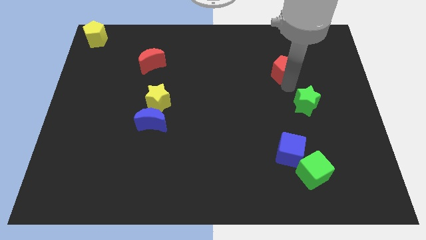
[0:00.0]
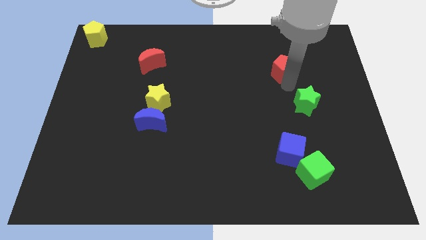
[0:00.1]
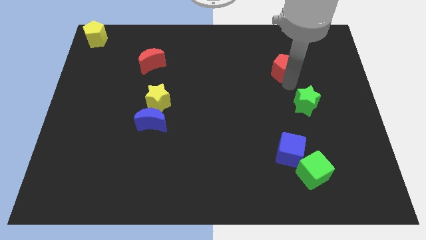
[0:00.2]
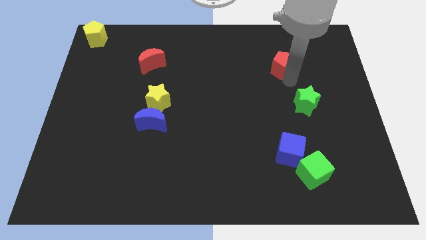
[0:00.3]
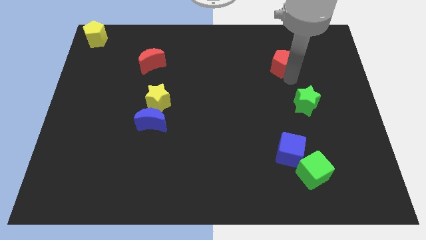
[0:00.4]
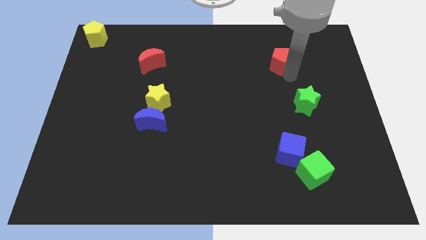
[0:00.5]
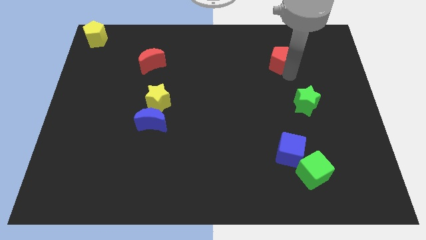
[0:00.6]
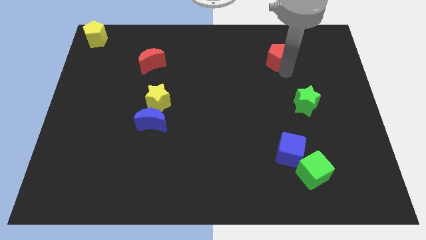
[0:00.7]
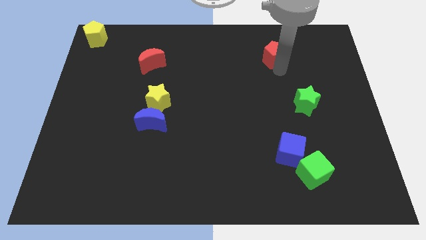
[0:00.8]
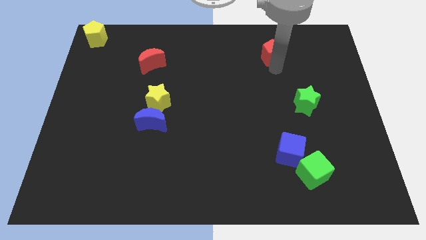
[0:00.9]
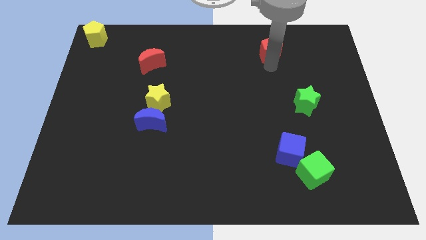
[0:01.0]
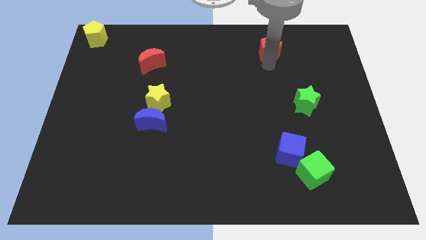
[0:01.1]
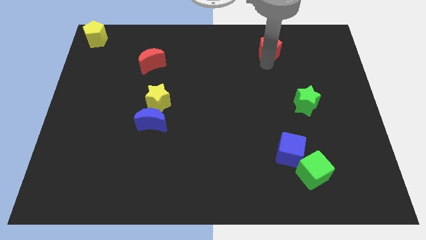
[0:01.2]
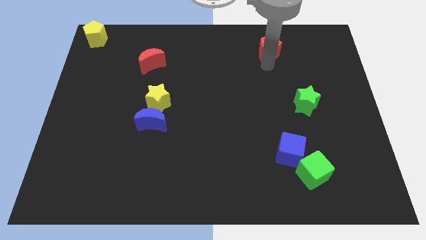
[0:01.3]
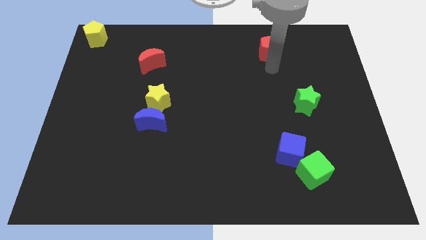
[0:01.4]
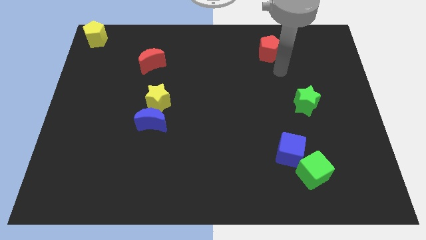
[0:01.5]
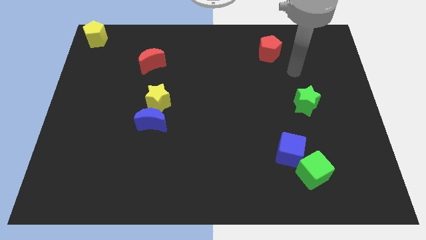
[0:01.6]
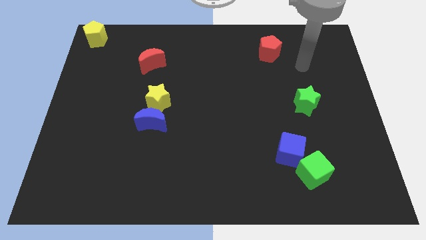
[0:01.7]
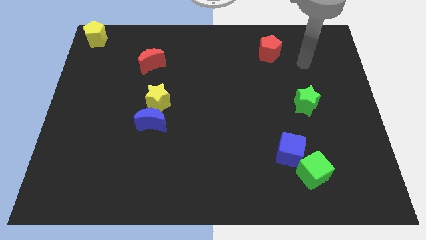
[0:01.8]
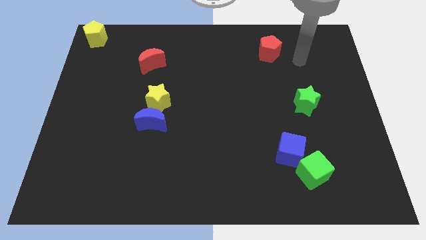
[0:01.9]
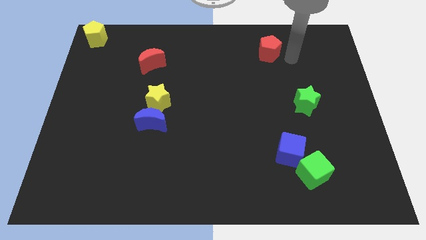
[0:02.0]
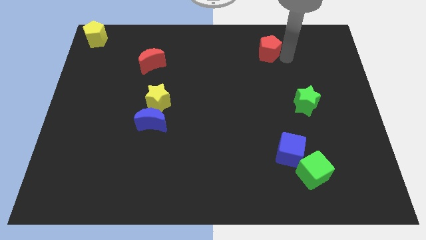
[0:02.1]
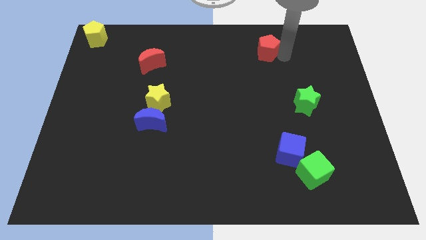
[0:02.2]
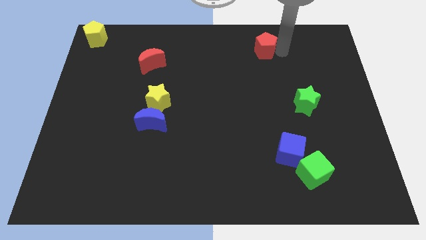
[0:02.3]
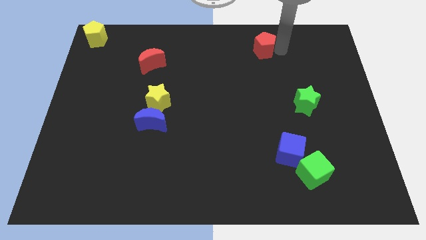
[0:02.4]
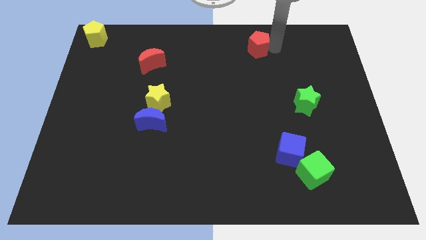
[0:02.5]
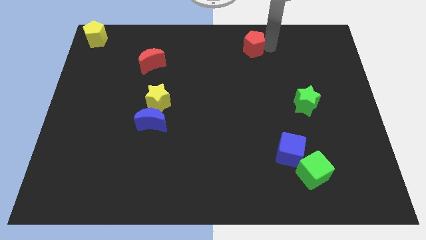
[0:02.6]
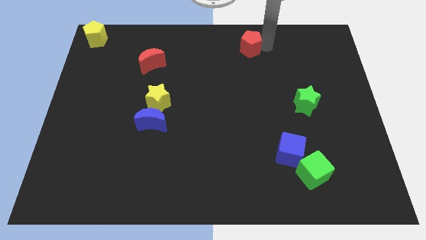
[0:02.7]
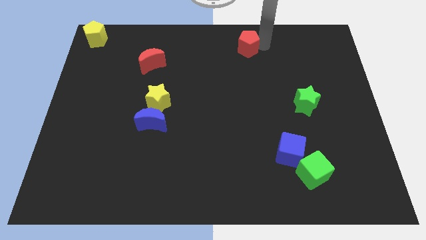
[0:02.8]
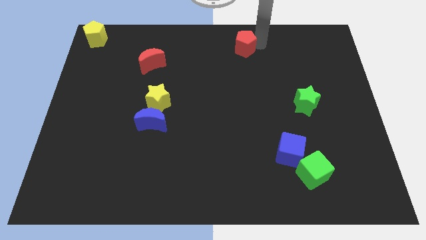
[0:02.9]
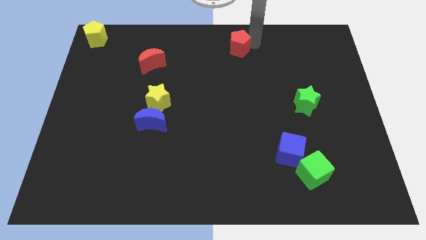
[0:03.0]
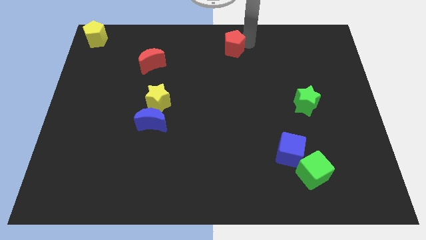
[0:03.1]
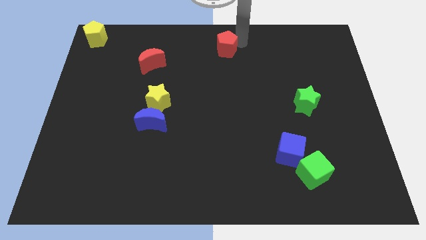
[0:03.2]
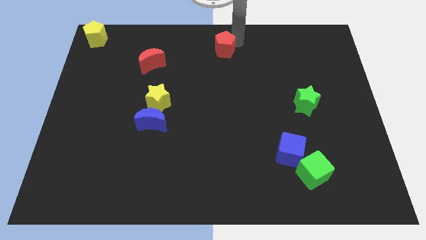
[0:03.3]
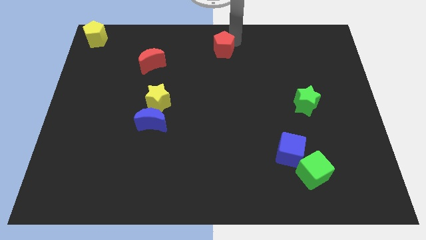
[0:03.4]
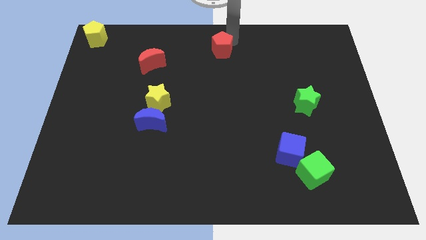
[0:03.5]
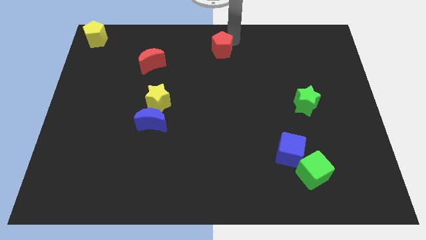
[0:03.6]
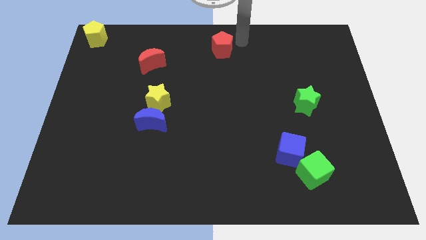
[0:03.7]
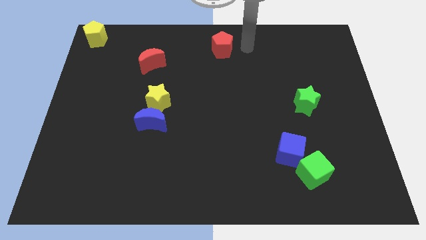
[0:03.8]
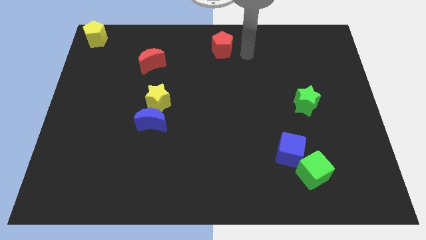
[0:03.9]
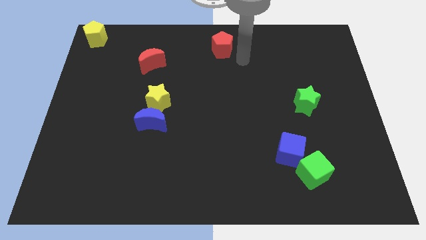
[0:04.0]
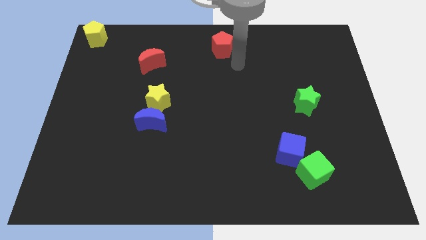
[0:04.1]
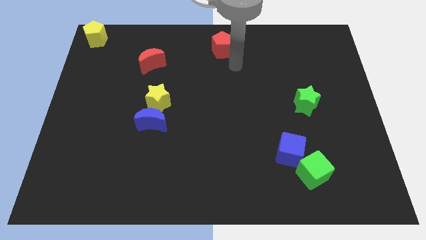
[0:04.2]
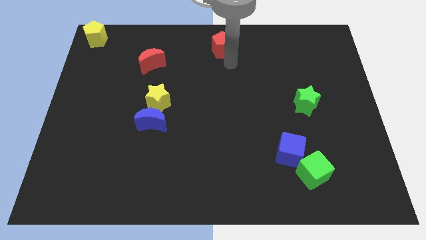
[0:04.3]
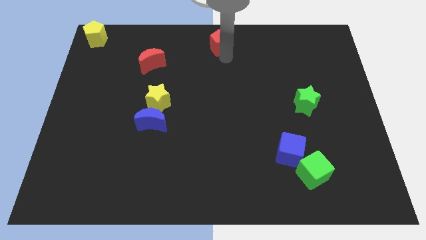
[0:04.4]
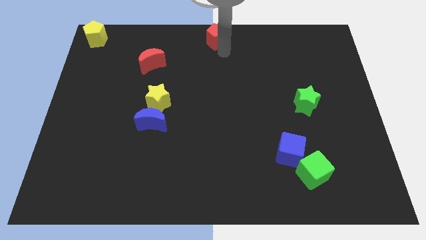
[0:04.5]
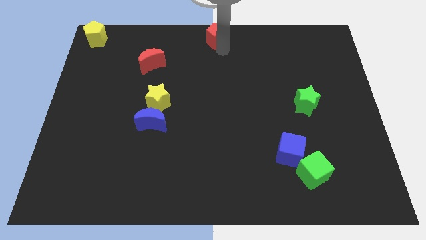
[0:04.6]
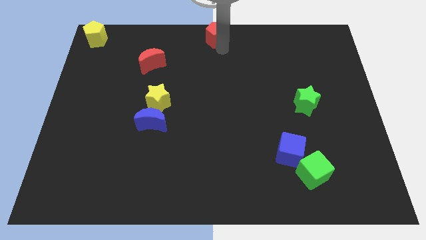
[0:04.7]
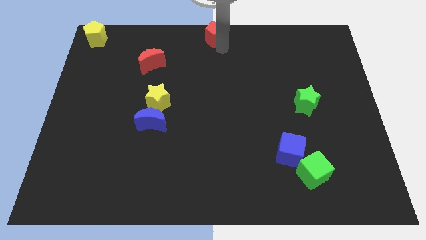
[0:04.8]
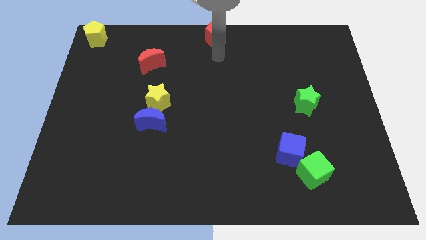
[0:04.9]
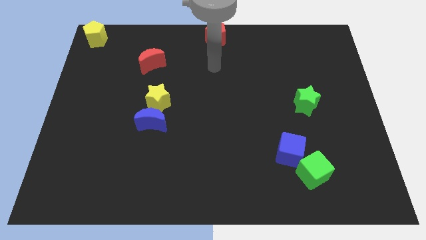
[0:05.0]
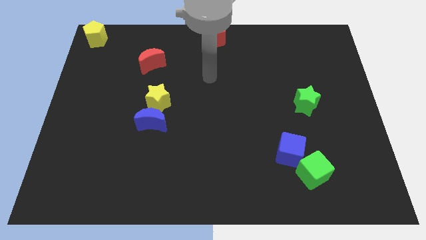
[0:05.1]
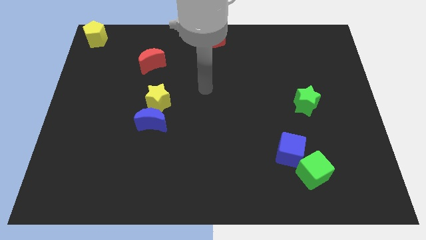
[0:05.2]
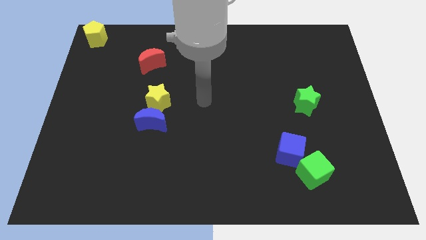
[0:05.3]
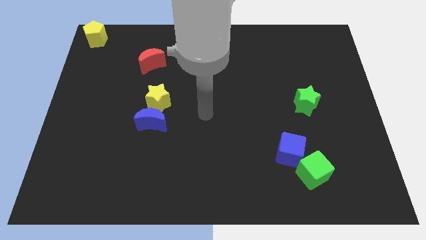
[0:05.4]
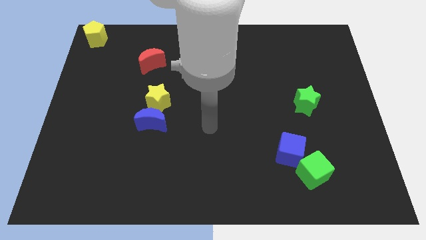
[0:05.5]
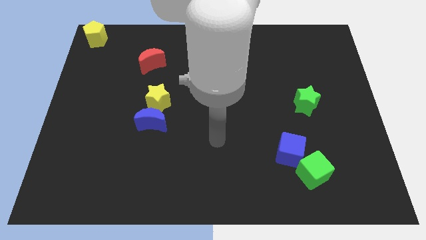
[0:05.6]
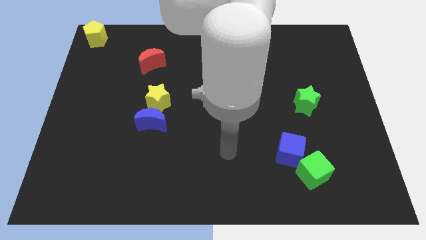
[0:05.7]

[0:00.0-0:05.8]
place the red pentagon at the top center of the board

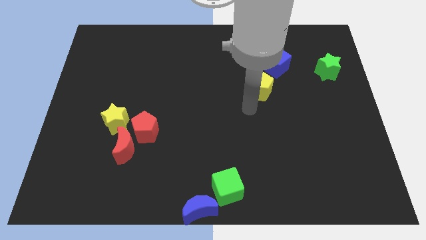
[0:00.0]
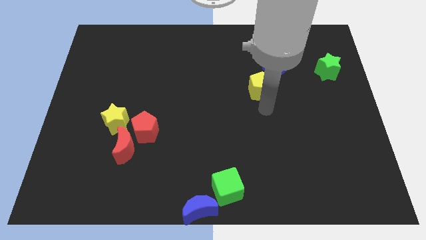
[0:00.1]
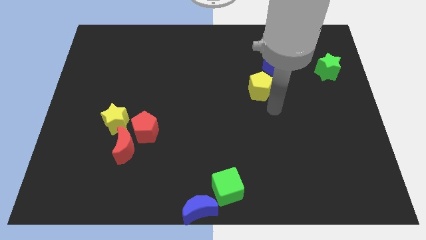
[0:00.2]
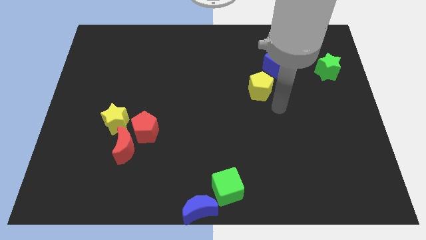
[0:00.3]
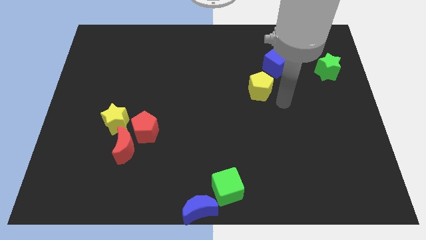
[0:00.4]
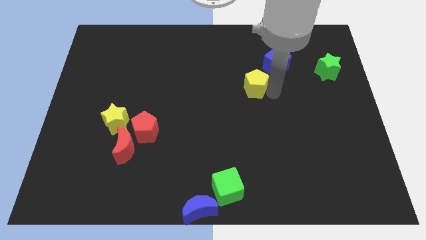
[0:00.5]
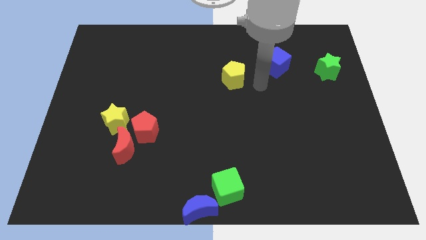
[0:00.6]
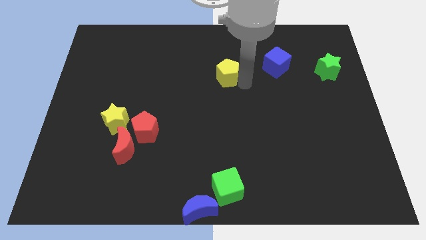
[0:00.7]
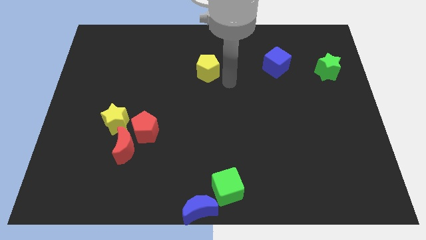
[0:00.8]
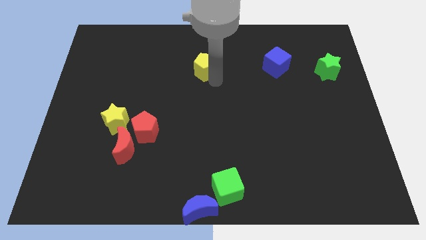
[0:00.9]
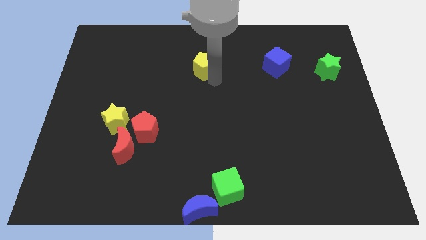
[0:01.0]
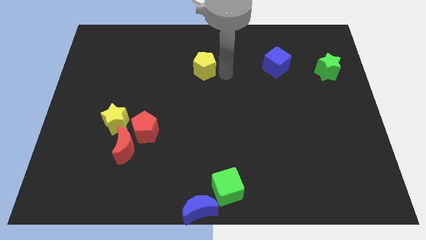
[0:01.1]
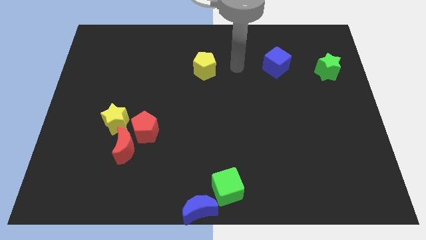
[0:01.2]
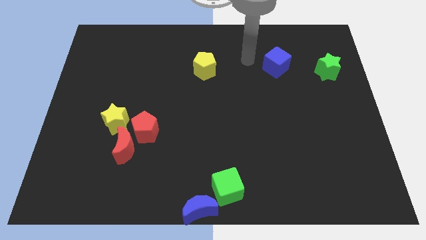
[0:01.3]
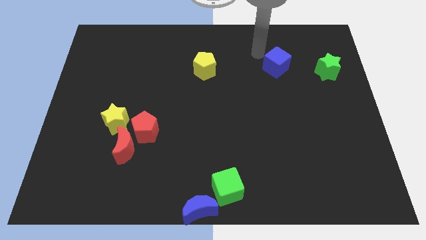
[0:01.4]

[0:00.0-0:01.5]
push the yellow pentagon to the horizontal left of the blue cube

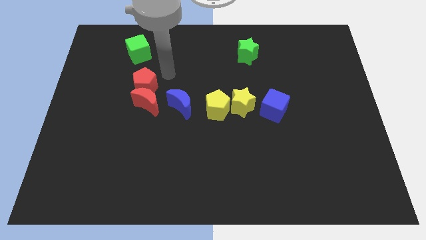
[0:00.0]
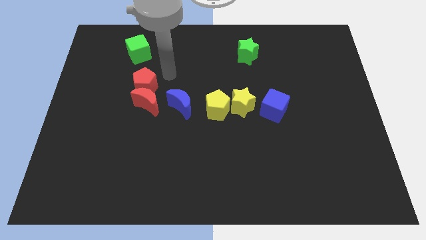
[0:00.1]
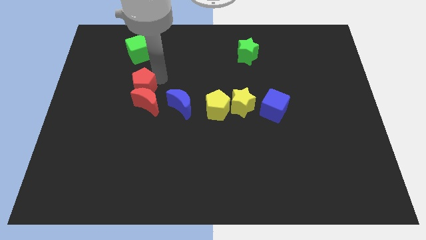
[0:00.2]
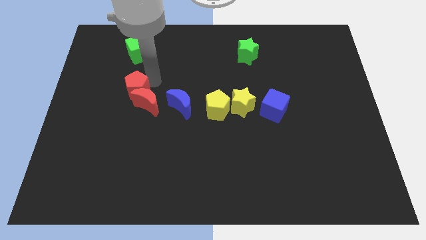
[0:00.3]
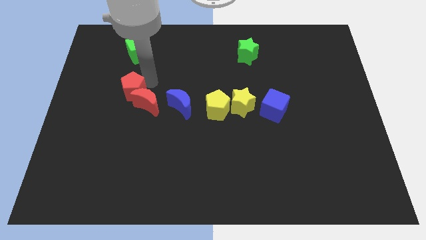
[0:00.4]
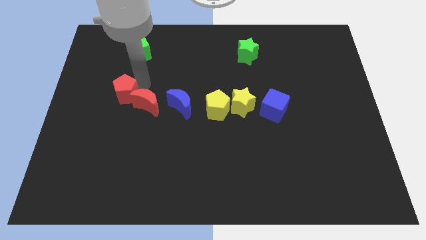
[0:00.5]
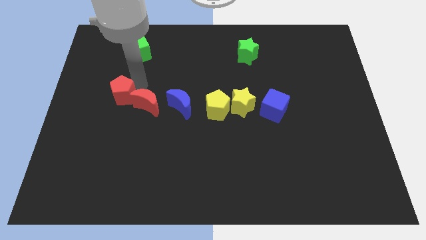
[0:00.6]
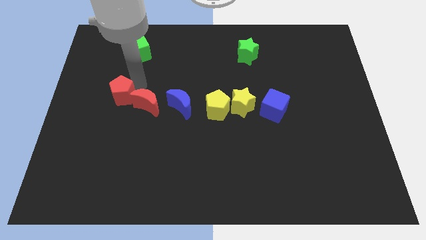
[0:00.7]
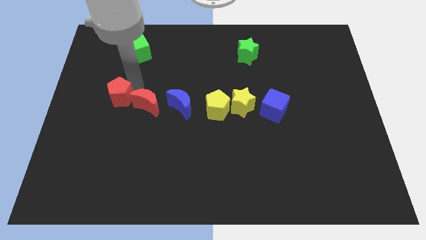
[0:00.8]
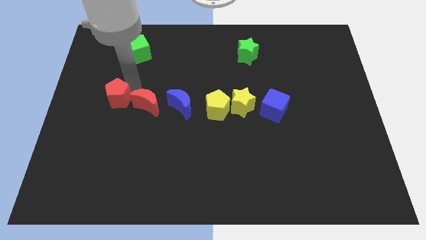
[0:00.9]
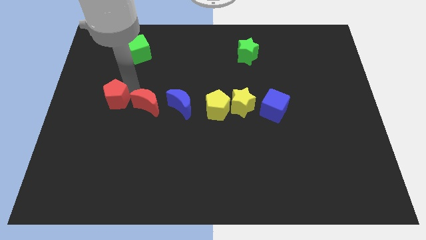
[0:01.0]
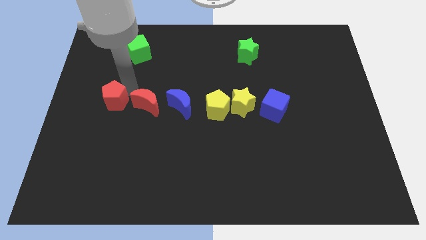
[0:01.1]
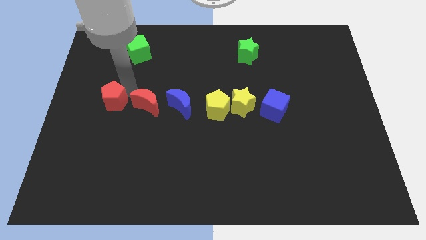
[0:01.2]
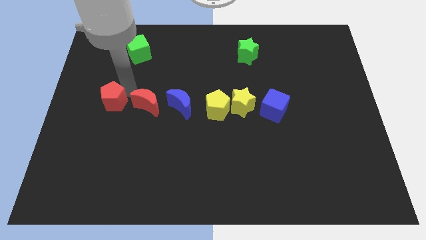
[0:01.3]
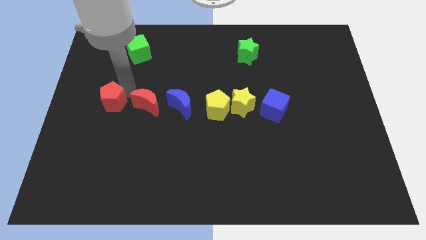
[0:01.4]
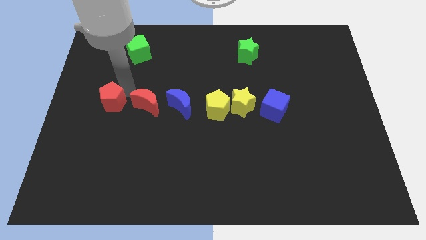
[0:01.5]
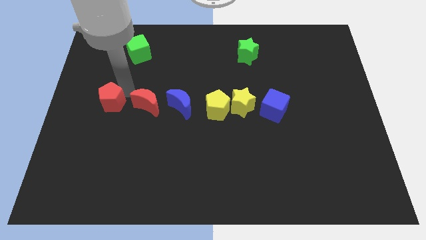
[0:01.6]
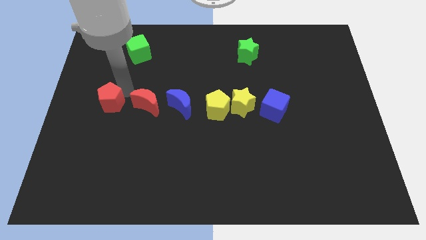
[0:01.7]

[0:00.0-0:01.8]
place the red pentagon parallel to red moon
